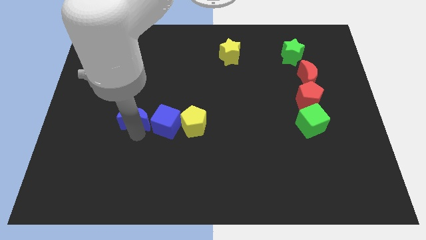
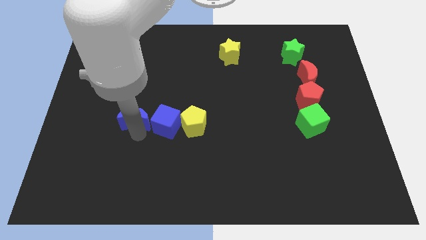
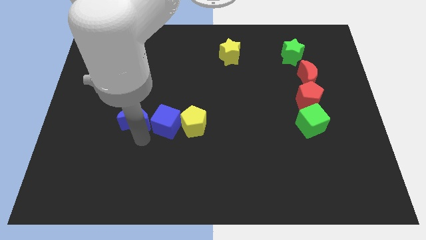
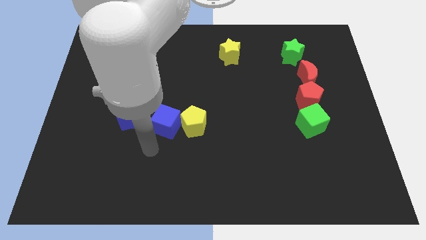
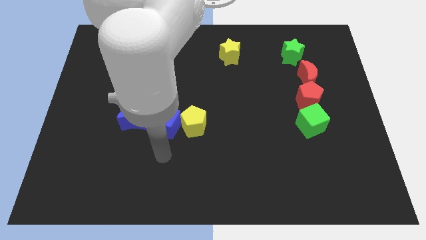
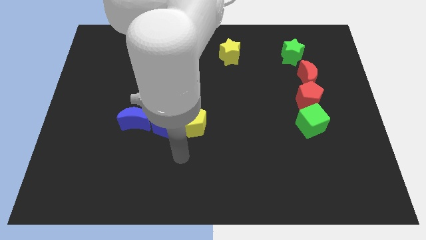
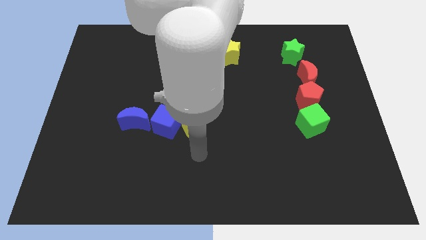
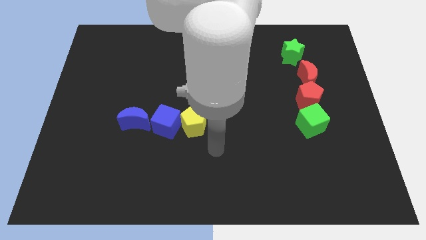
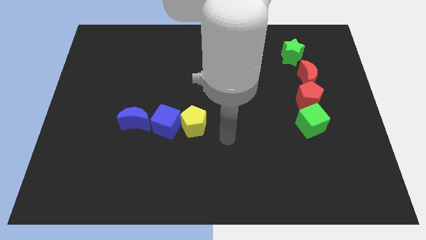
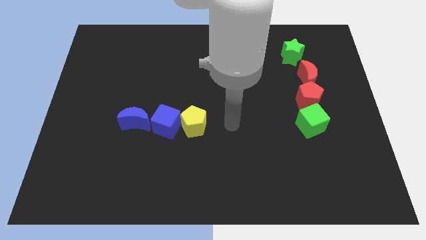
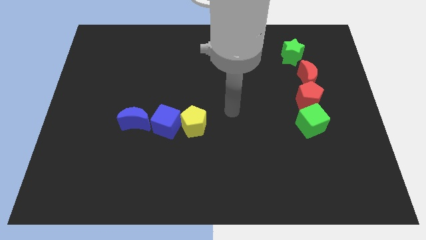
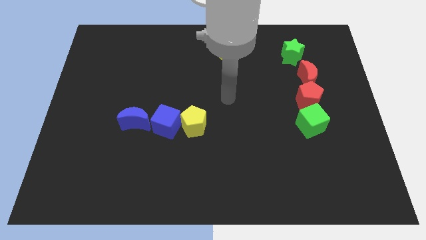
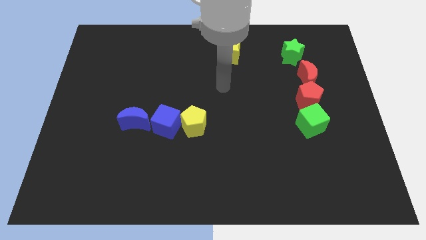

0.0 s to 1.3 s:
move the arm towards the right side of the yellow pentagon

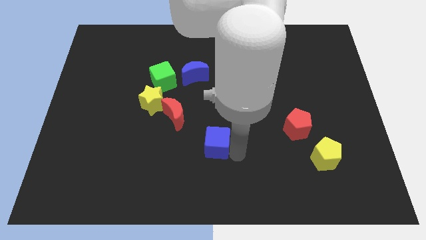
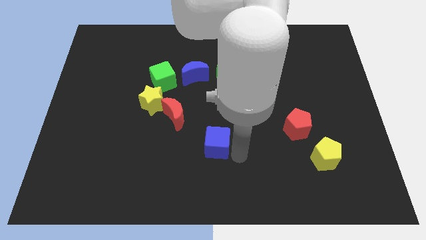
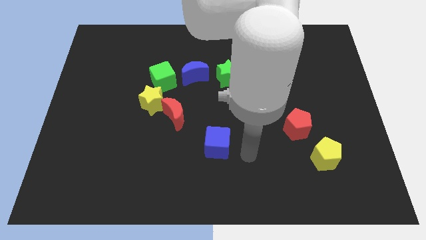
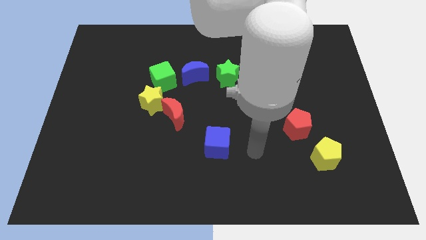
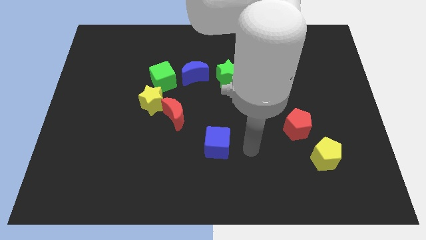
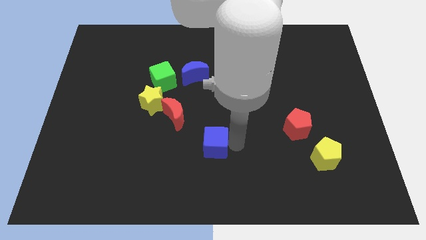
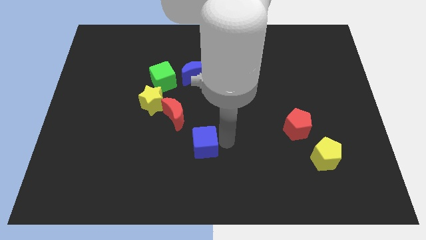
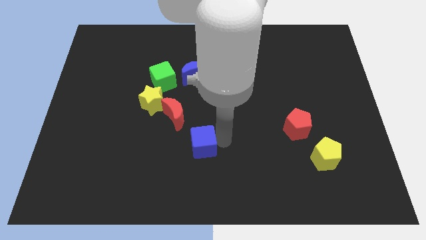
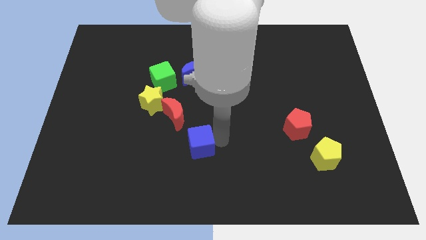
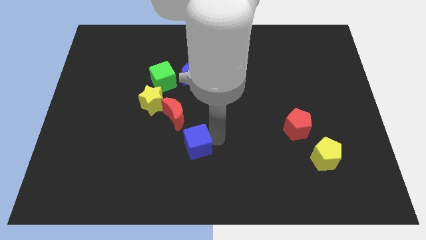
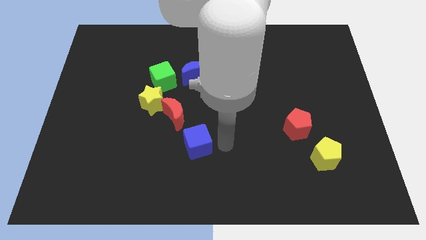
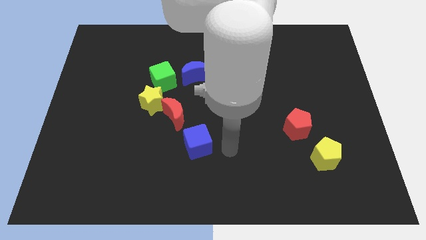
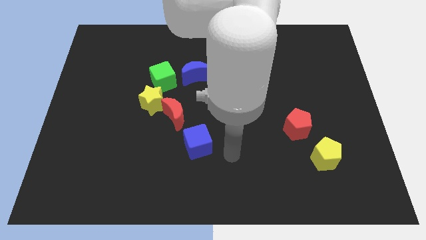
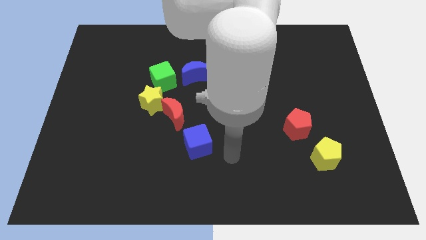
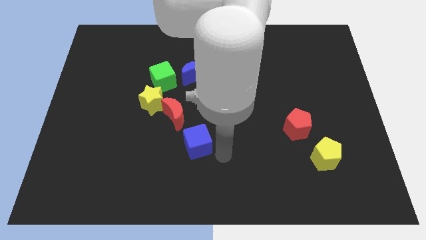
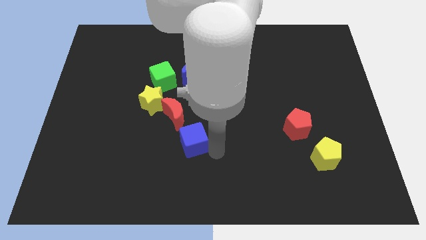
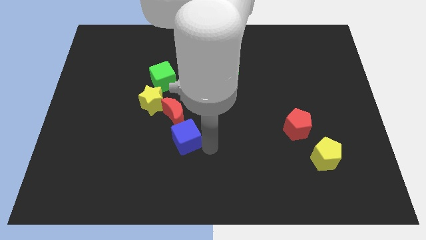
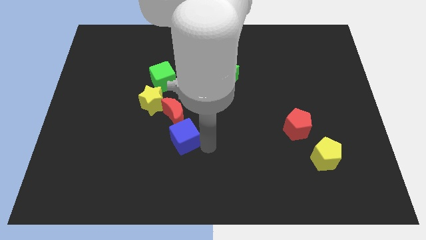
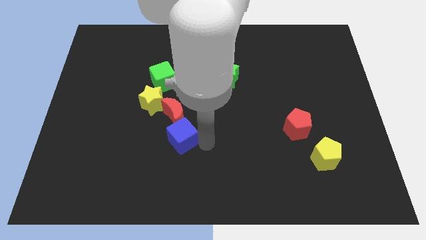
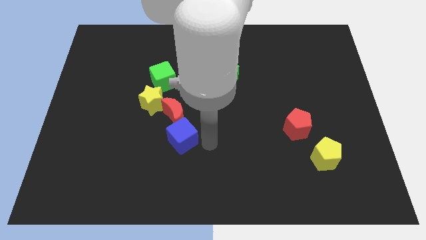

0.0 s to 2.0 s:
move the blue cube below the red crescent

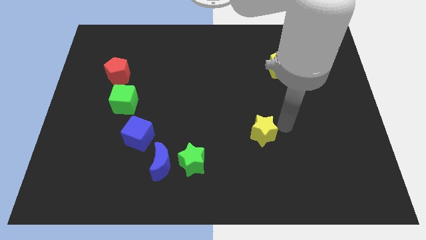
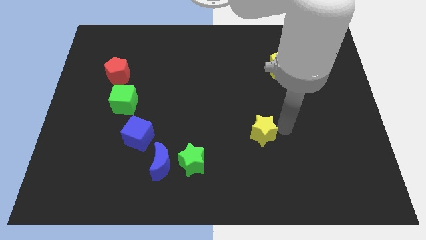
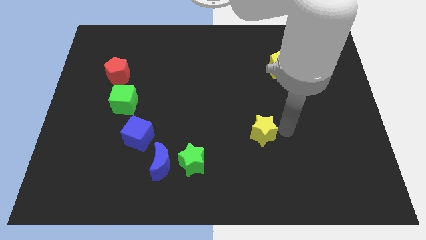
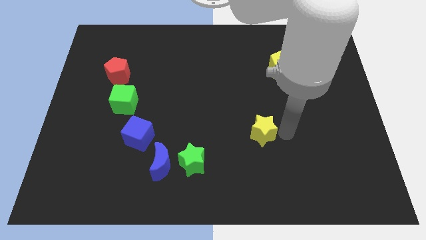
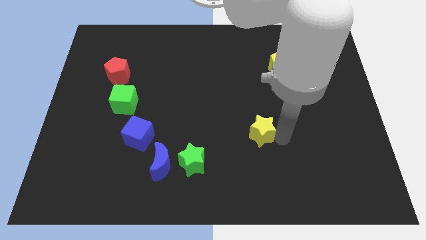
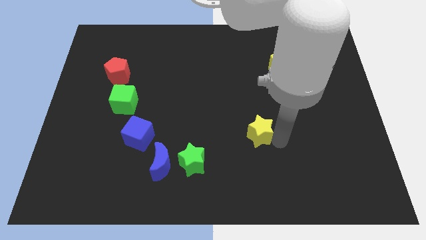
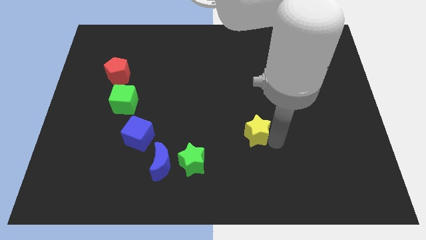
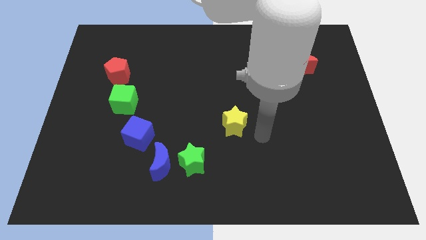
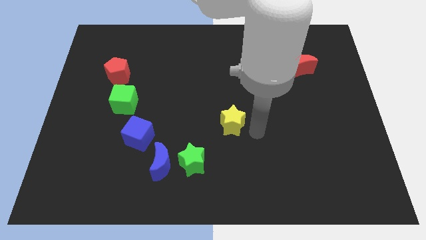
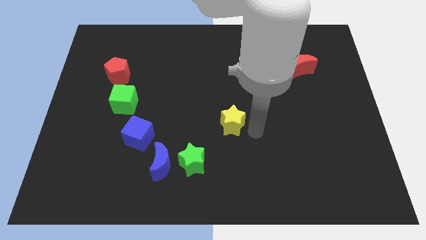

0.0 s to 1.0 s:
place yellow star diagonally to the green star

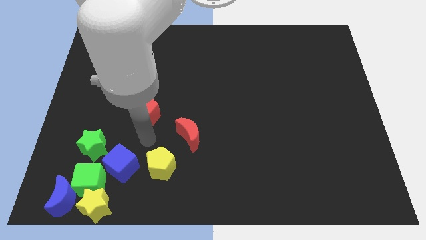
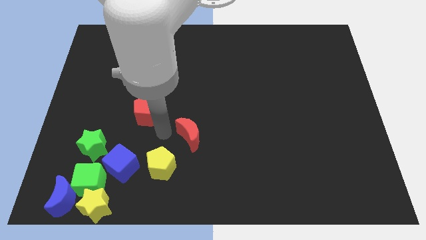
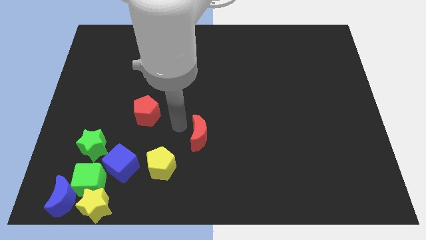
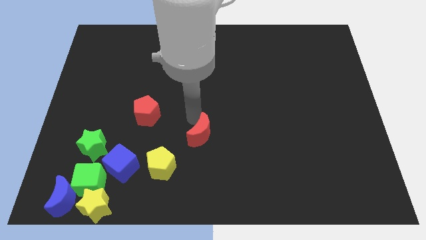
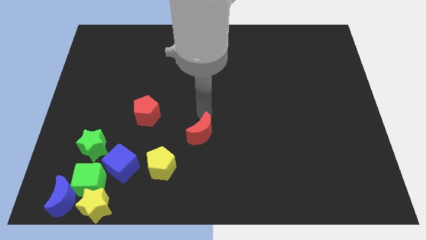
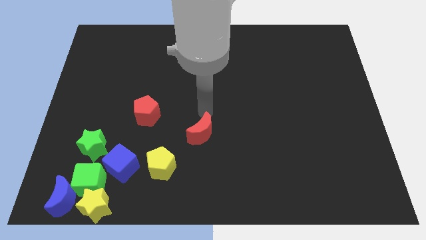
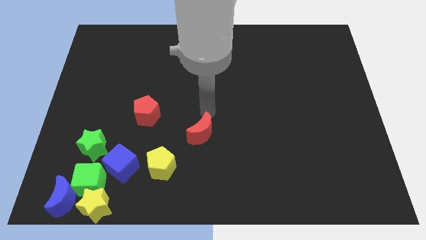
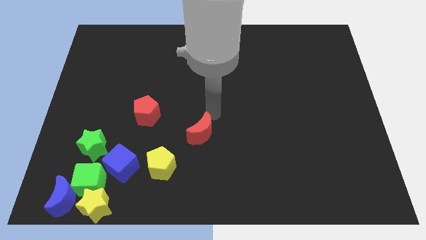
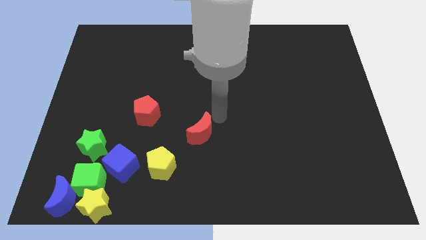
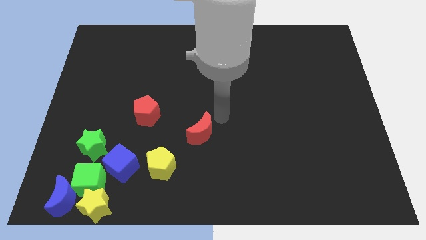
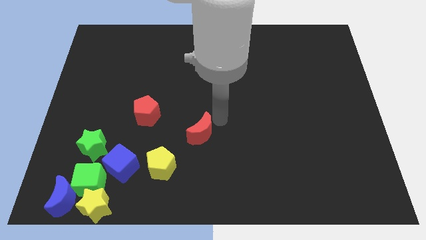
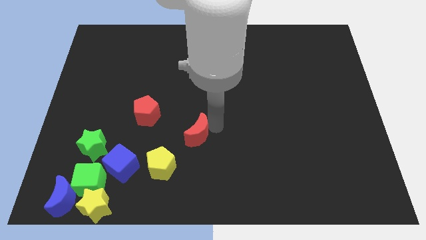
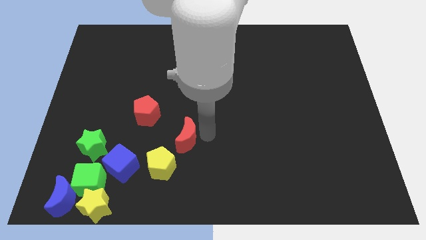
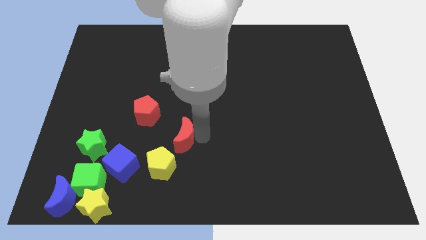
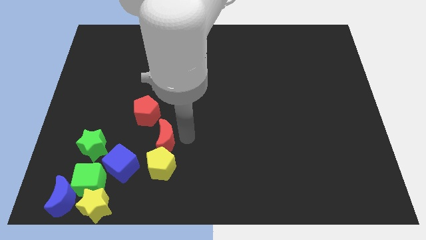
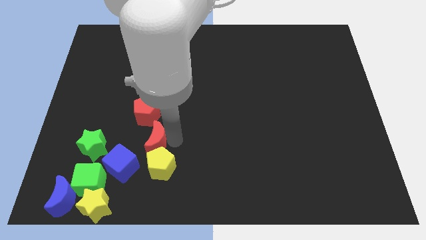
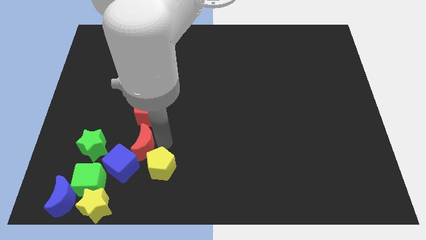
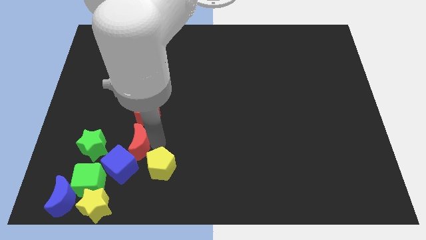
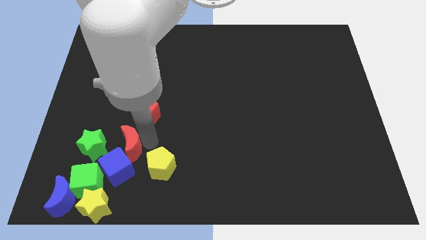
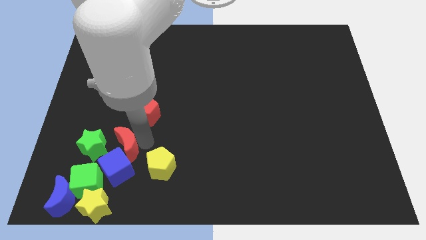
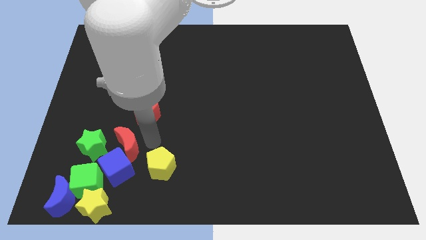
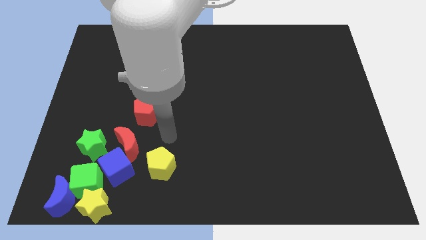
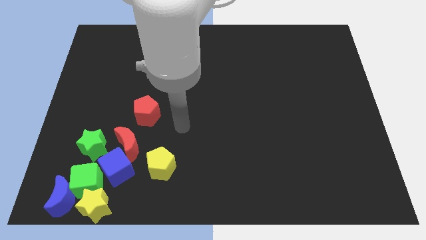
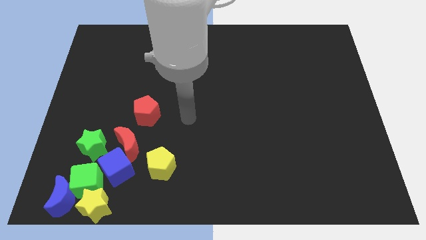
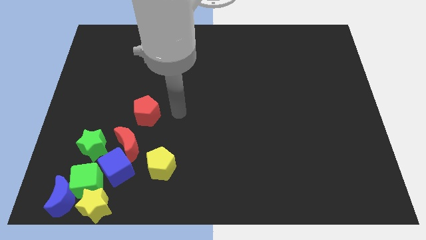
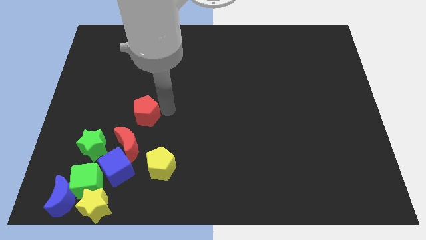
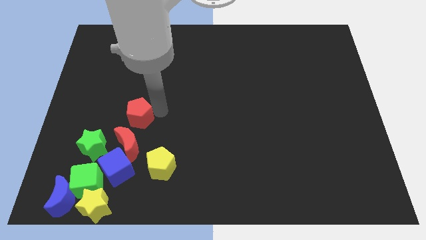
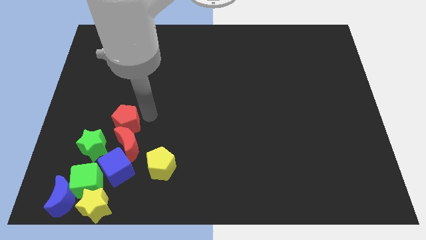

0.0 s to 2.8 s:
place red crescent to the top right of blue cube

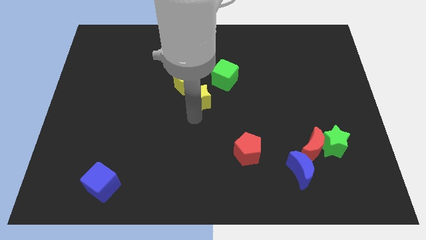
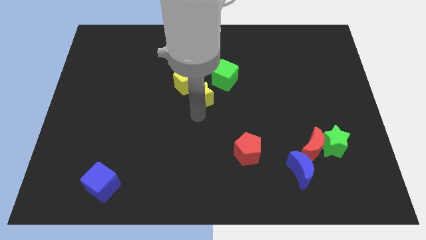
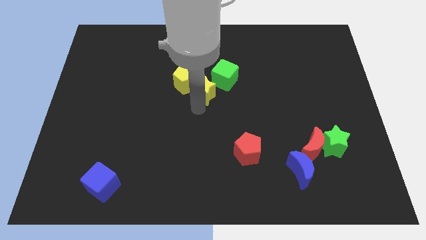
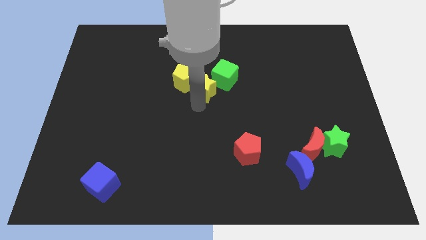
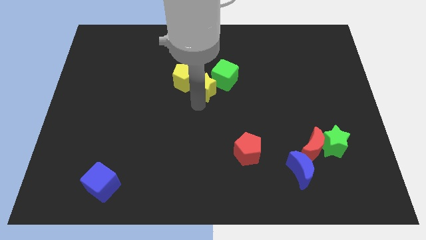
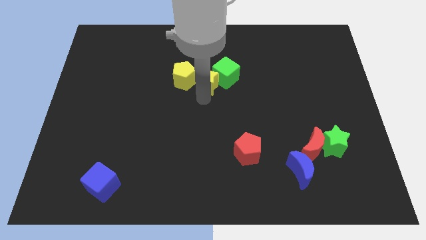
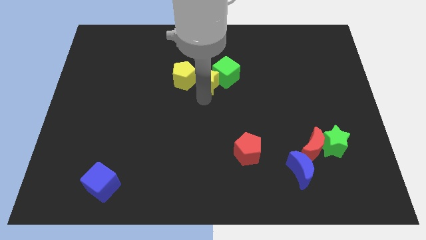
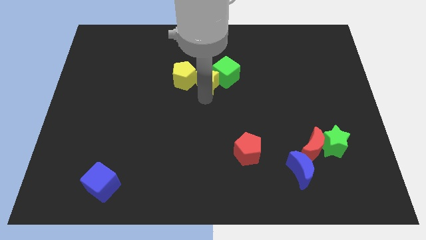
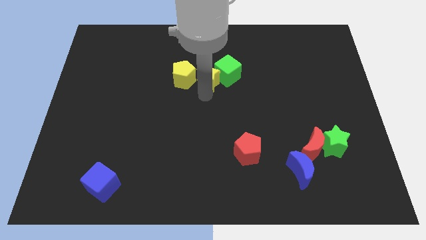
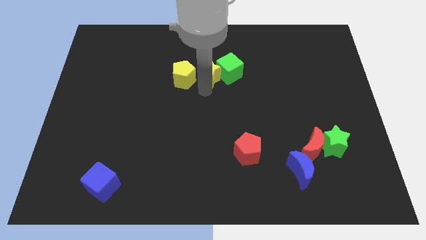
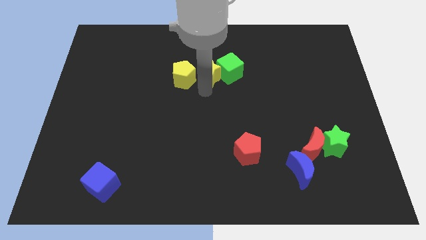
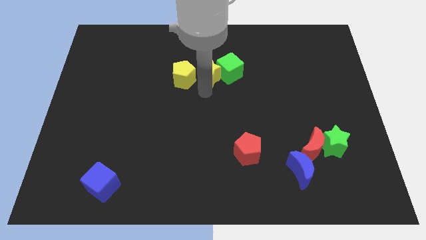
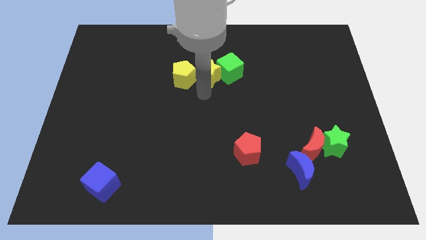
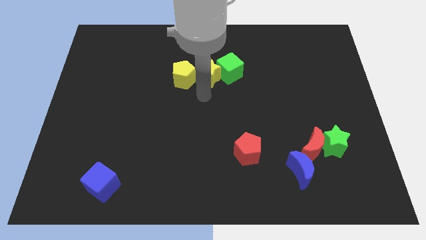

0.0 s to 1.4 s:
move the yellow star in between the yellow pentagon and green cube

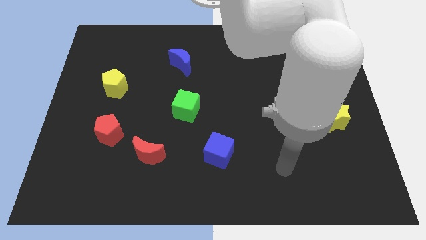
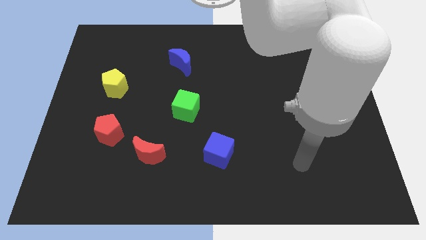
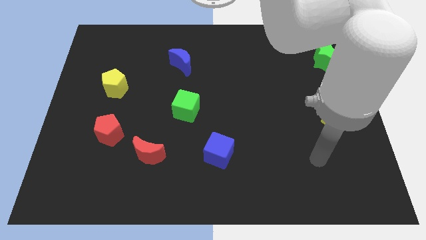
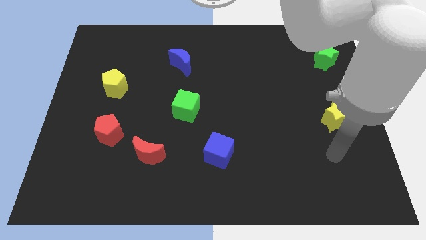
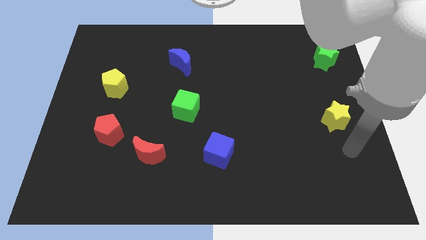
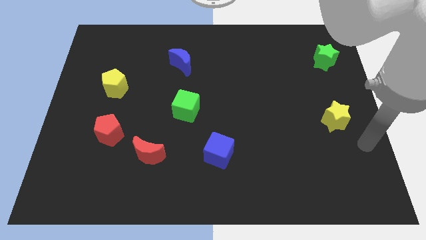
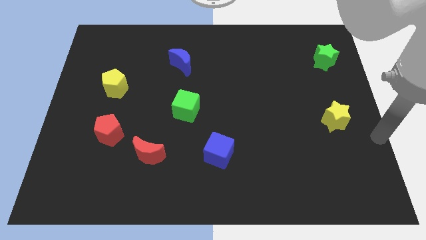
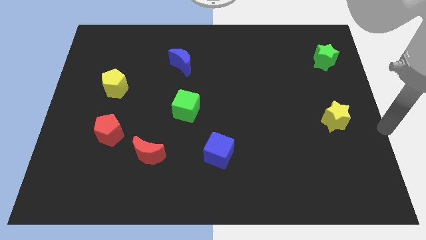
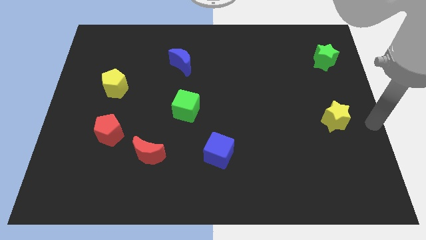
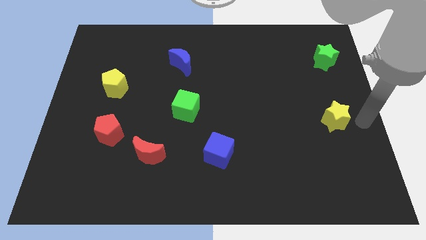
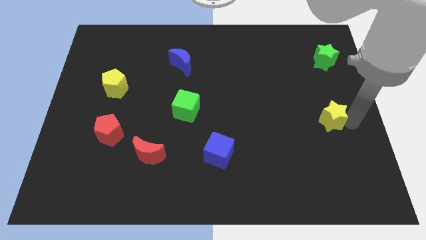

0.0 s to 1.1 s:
place the arm right to the yellow star
